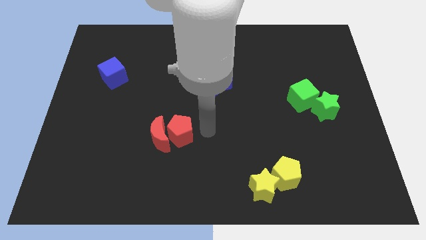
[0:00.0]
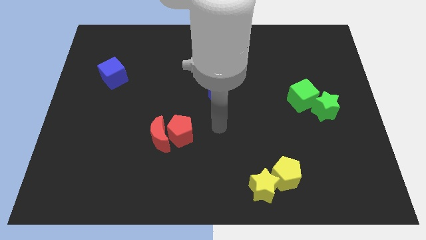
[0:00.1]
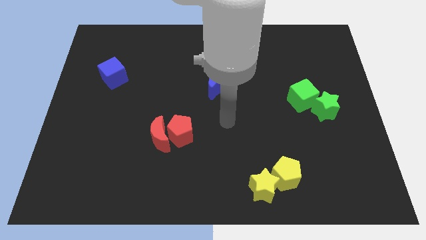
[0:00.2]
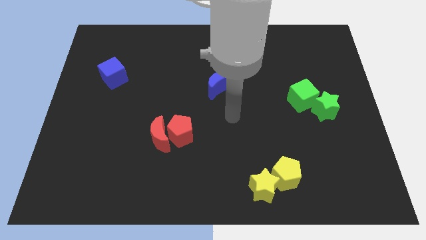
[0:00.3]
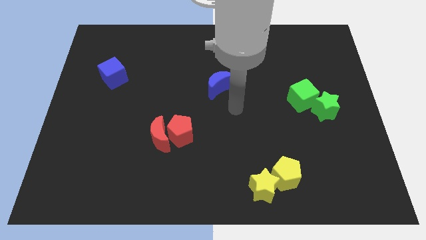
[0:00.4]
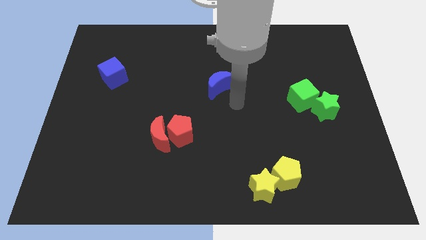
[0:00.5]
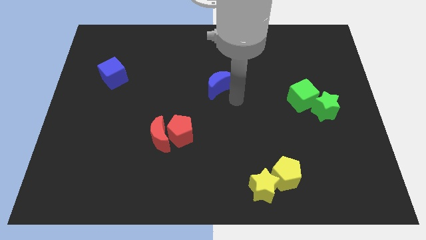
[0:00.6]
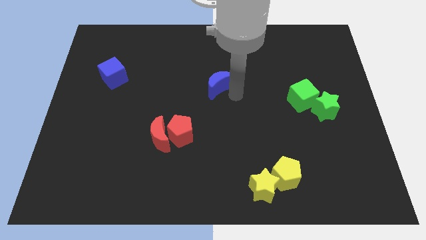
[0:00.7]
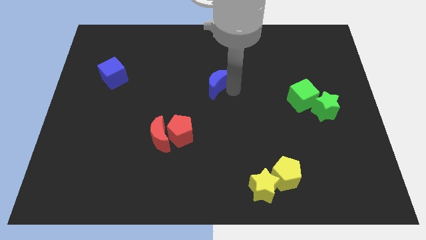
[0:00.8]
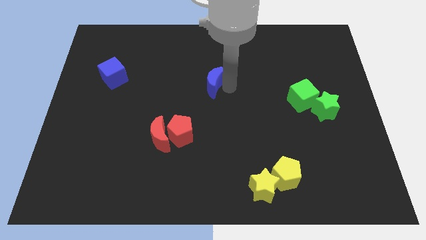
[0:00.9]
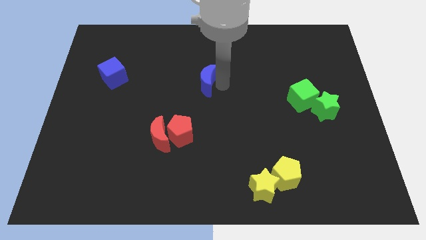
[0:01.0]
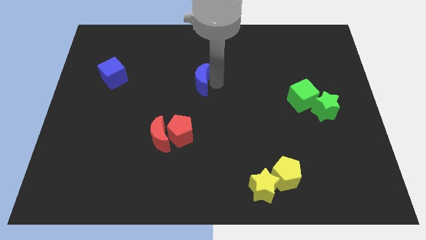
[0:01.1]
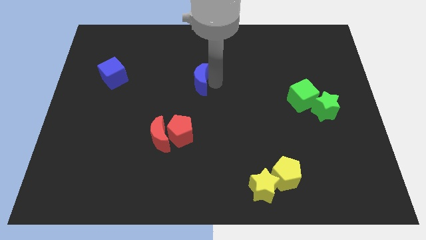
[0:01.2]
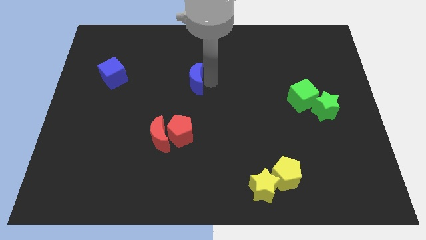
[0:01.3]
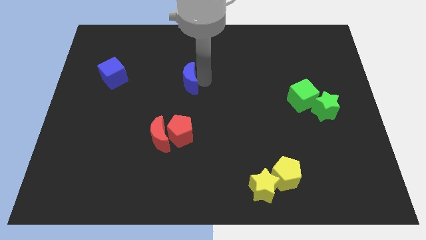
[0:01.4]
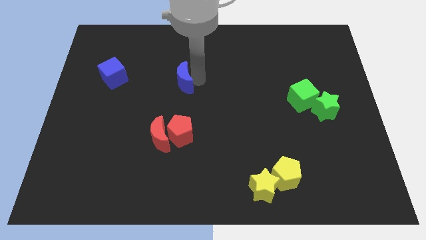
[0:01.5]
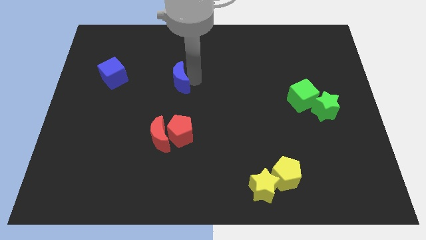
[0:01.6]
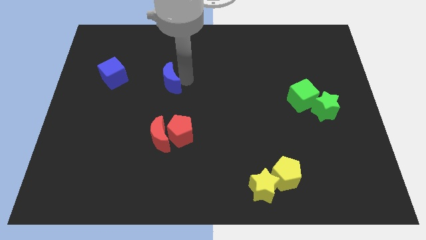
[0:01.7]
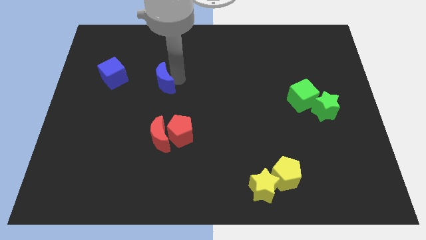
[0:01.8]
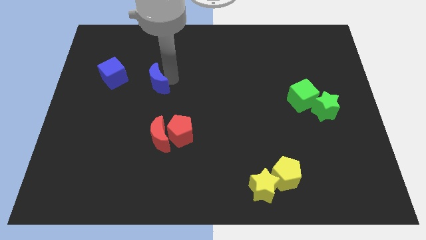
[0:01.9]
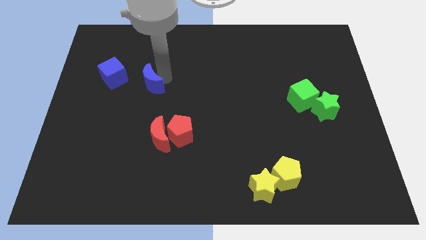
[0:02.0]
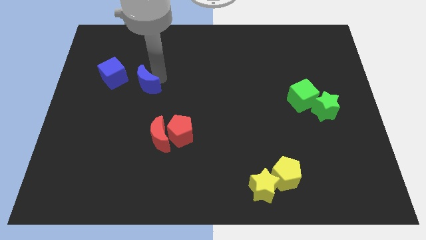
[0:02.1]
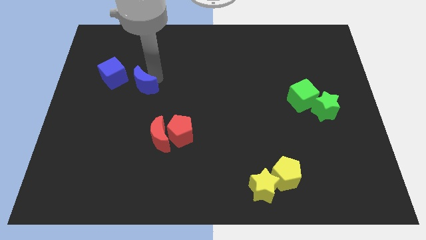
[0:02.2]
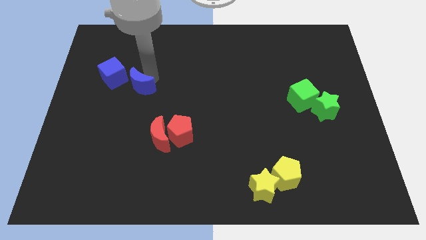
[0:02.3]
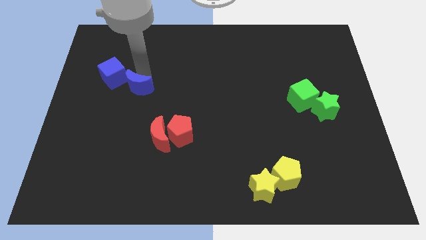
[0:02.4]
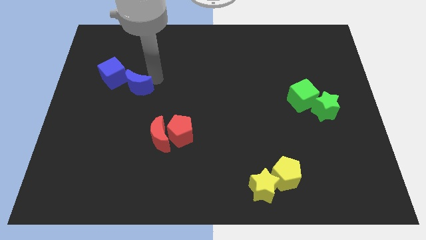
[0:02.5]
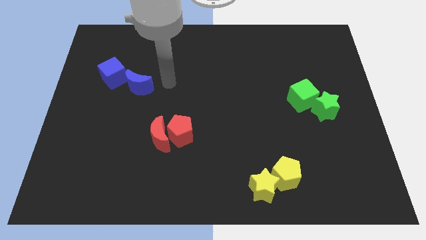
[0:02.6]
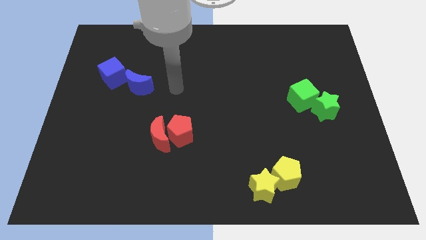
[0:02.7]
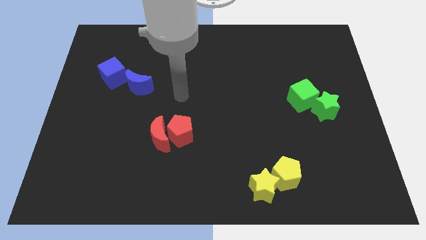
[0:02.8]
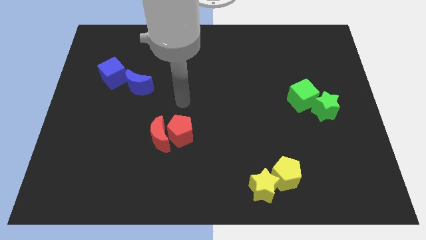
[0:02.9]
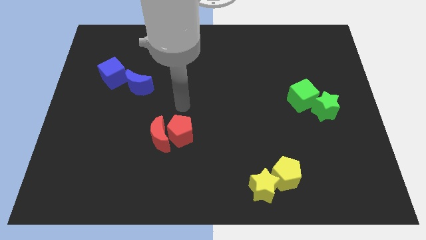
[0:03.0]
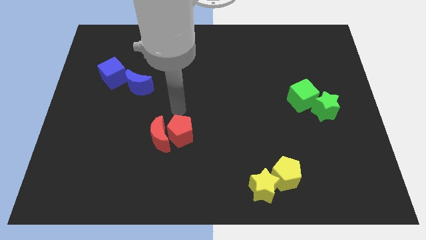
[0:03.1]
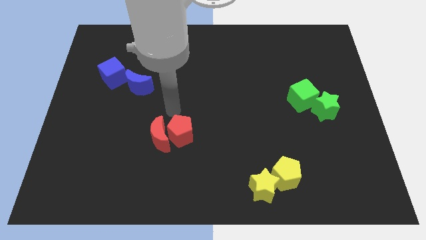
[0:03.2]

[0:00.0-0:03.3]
place blue moon to the right side of the blue cube

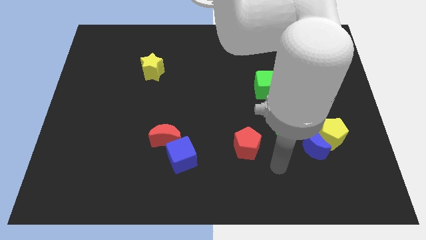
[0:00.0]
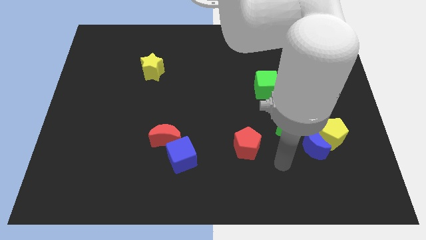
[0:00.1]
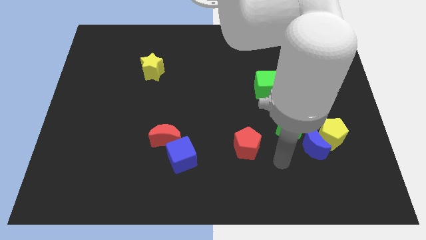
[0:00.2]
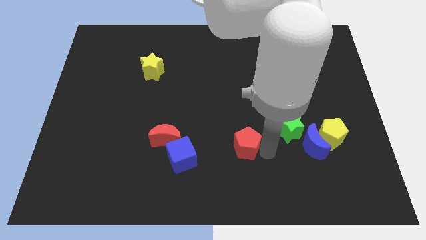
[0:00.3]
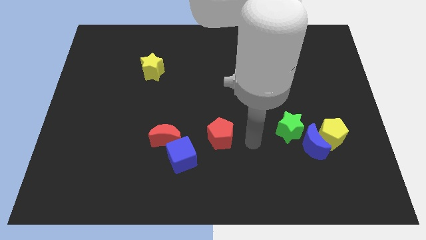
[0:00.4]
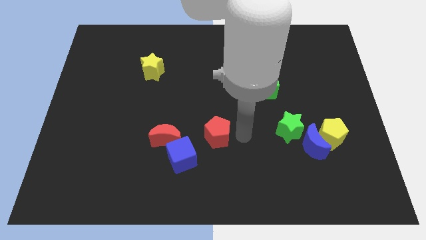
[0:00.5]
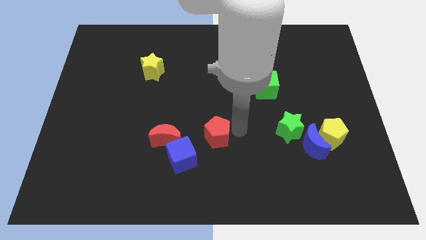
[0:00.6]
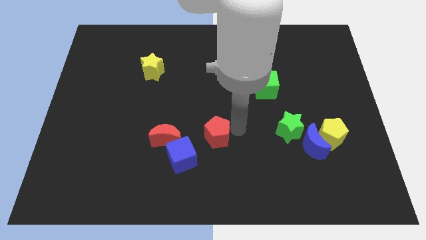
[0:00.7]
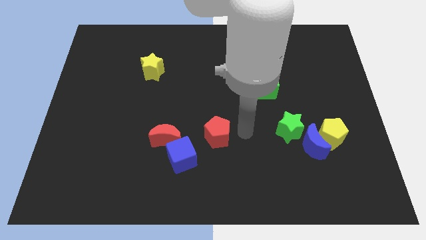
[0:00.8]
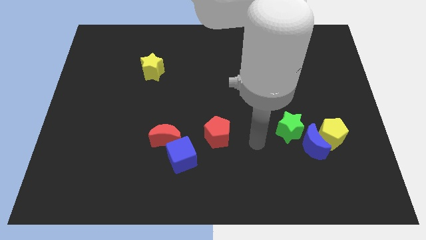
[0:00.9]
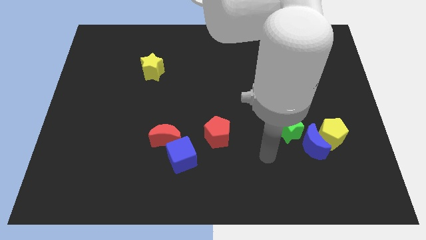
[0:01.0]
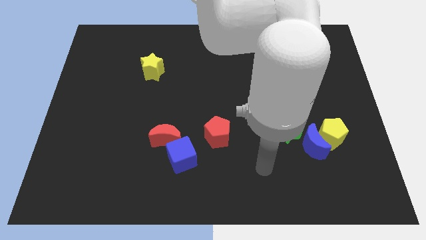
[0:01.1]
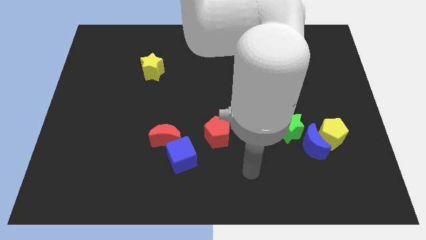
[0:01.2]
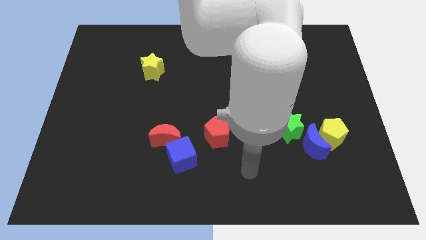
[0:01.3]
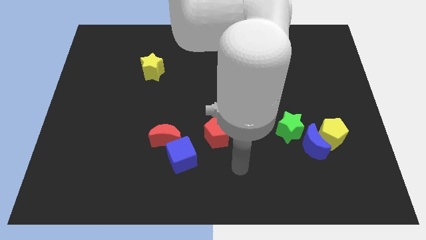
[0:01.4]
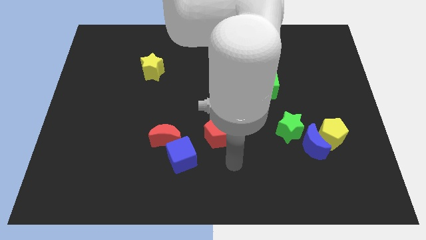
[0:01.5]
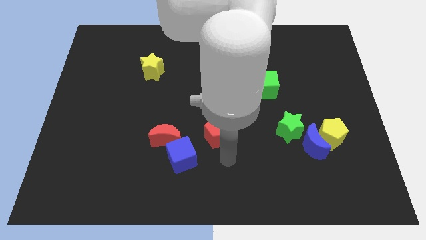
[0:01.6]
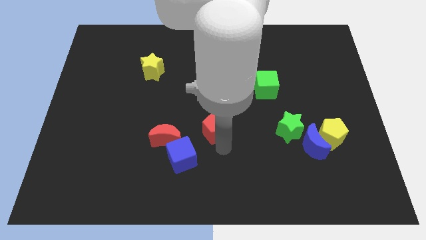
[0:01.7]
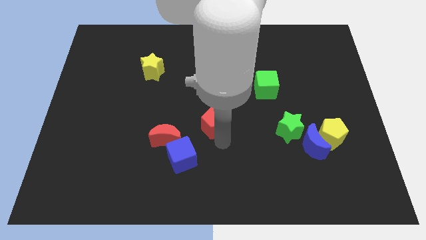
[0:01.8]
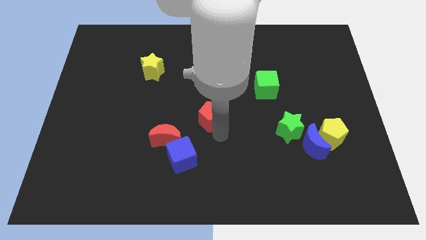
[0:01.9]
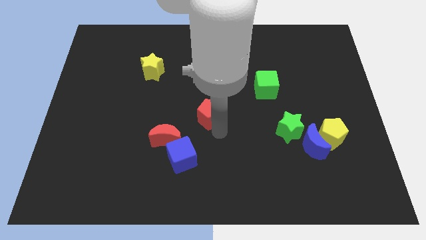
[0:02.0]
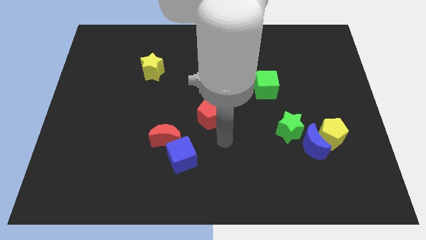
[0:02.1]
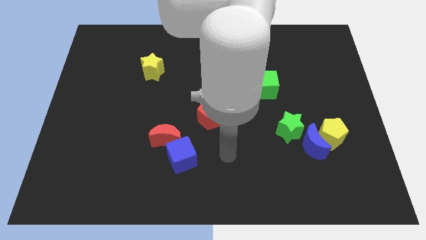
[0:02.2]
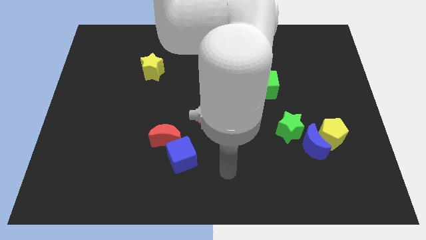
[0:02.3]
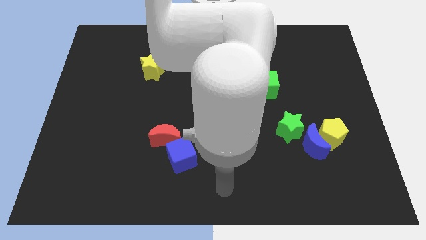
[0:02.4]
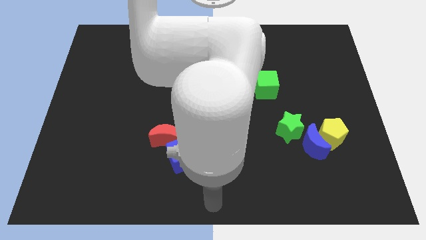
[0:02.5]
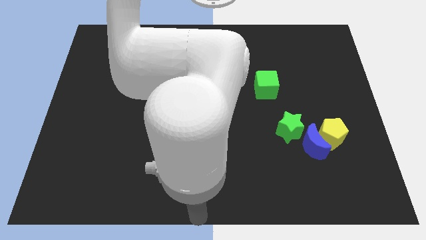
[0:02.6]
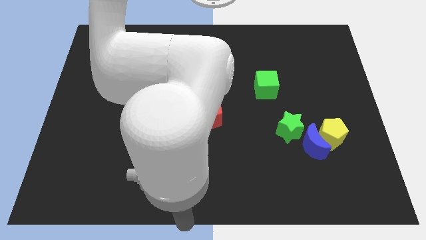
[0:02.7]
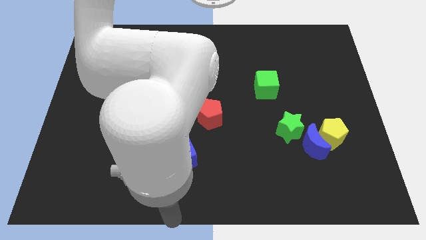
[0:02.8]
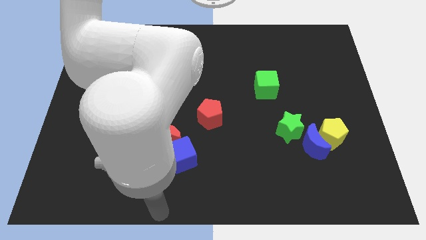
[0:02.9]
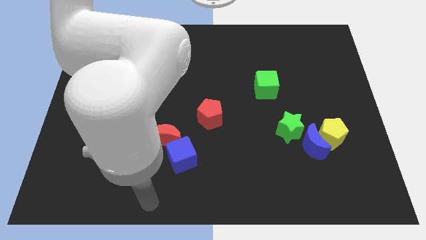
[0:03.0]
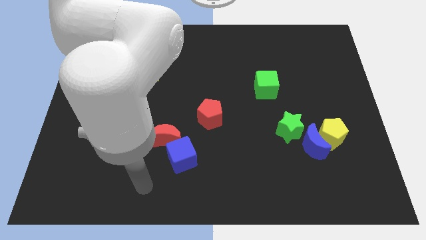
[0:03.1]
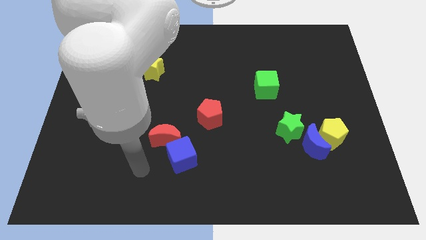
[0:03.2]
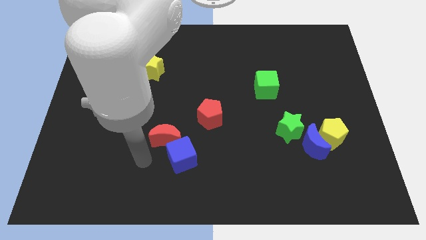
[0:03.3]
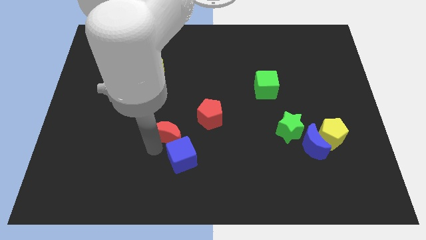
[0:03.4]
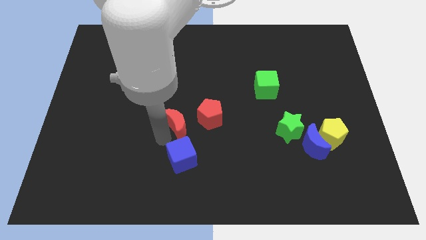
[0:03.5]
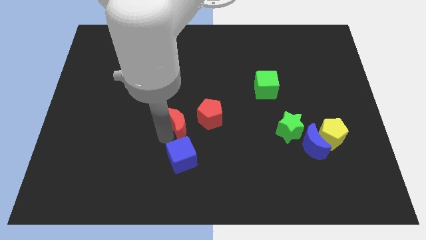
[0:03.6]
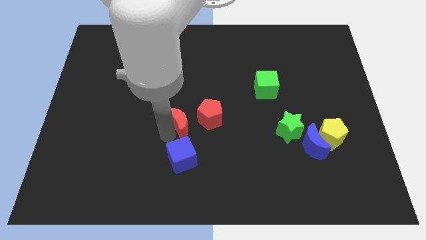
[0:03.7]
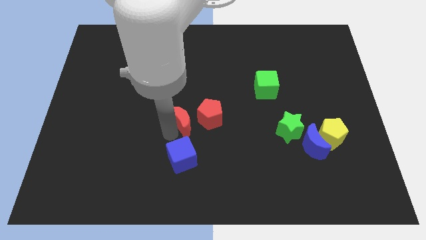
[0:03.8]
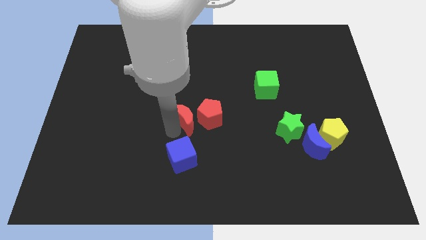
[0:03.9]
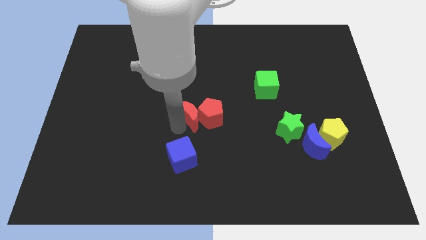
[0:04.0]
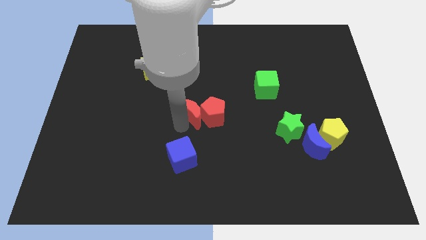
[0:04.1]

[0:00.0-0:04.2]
place the red pentagon and red crescent towards the center

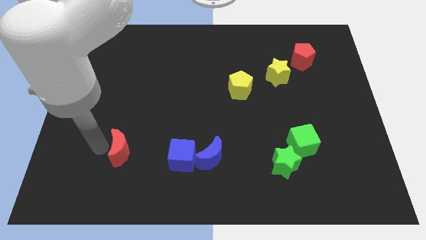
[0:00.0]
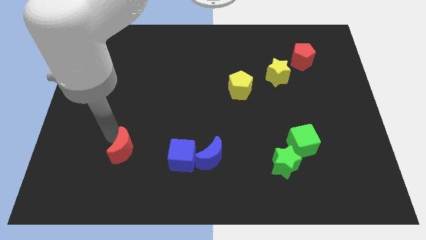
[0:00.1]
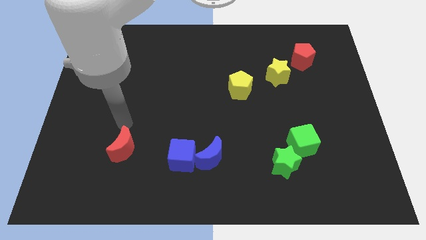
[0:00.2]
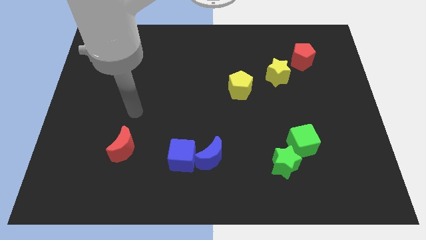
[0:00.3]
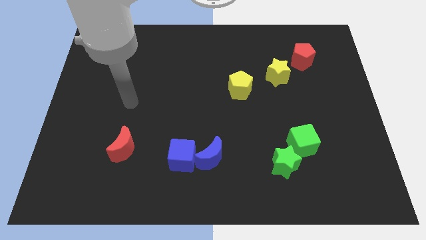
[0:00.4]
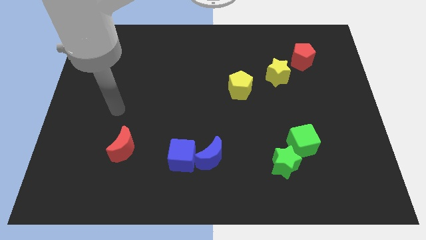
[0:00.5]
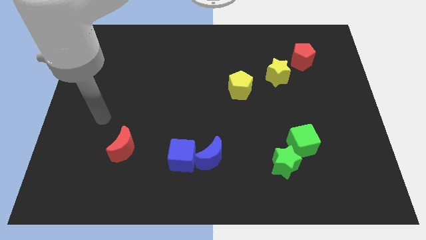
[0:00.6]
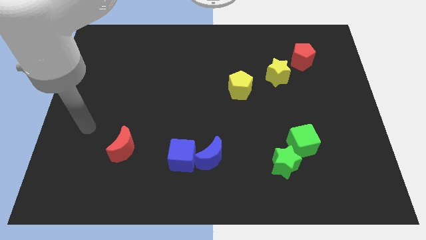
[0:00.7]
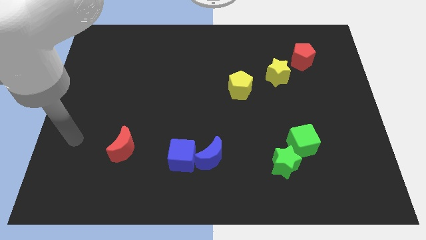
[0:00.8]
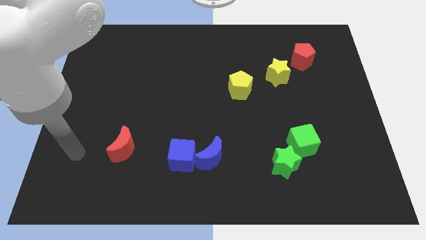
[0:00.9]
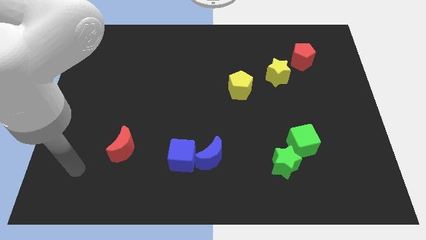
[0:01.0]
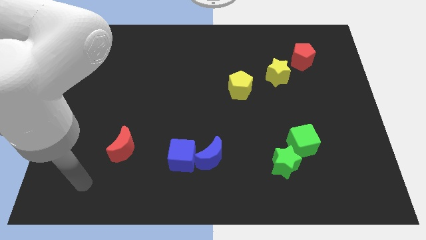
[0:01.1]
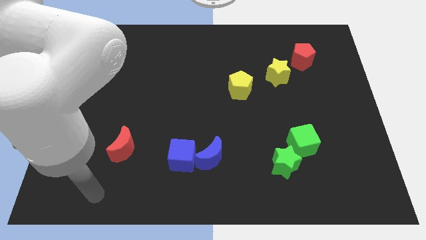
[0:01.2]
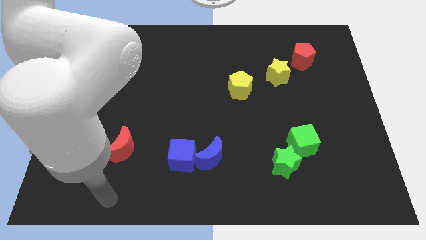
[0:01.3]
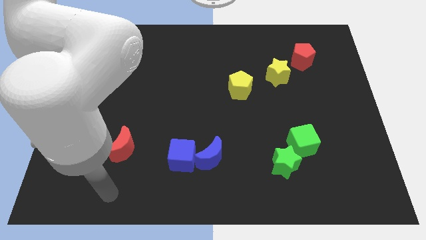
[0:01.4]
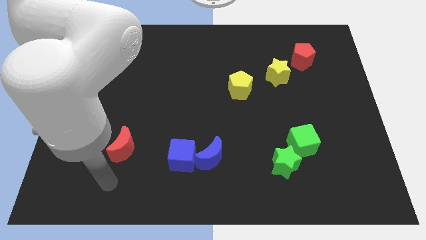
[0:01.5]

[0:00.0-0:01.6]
move the arm away from the red moon
